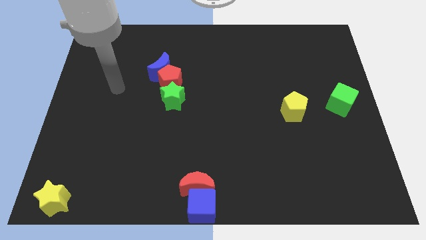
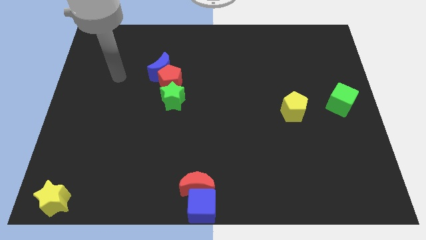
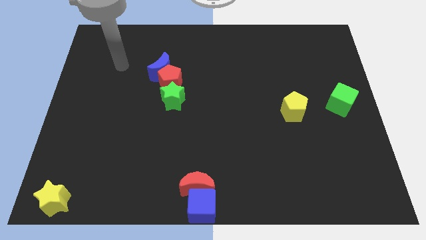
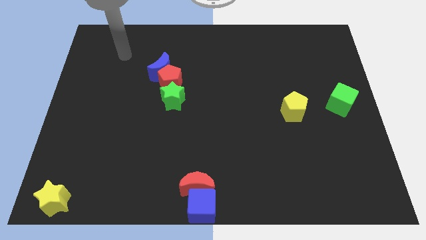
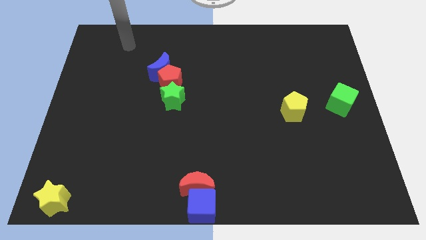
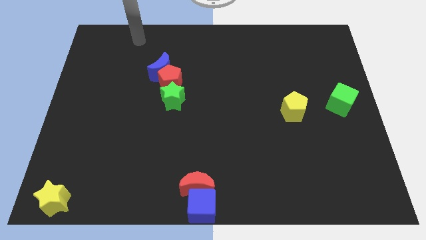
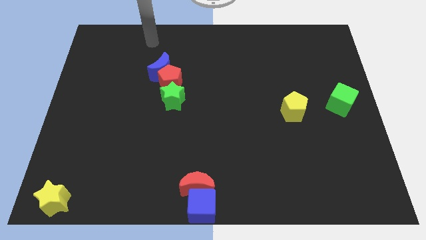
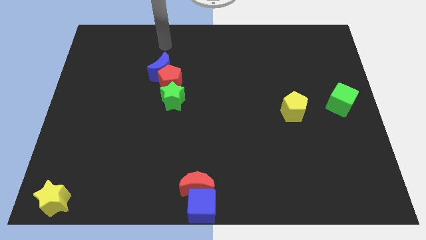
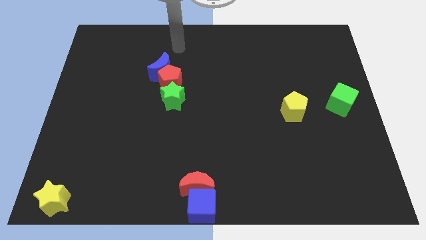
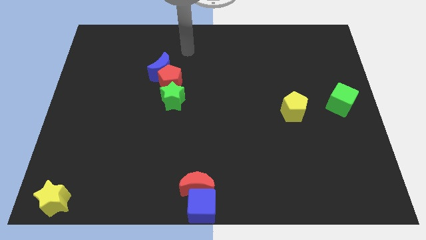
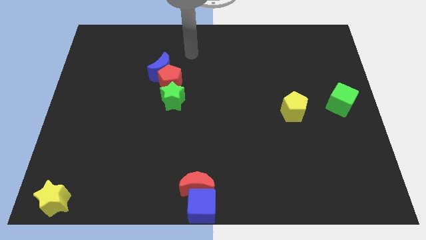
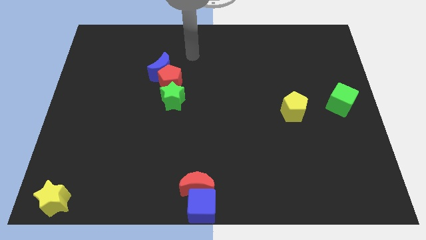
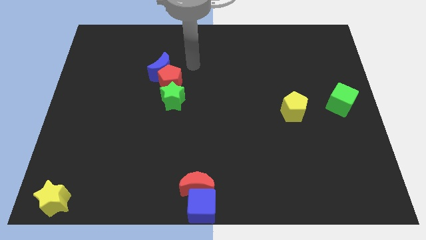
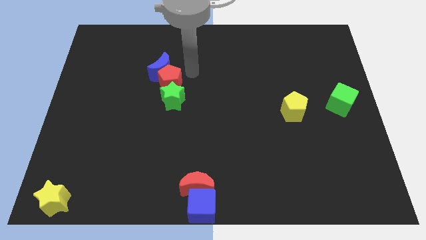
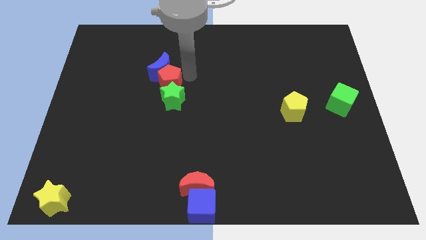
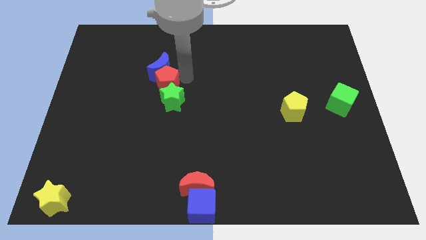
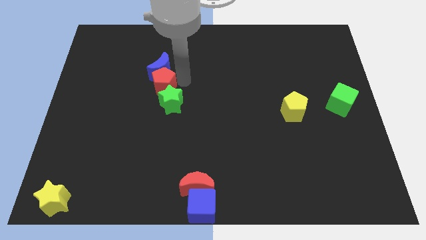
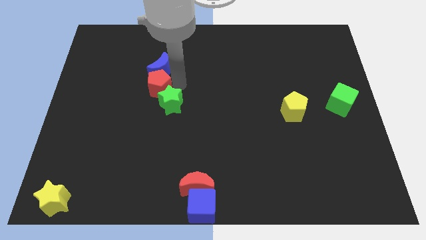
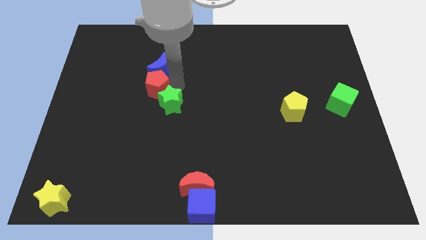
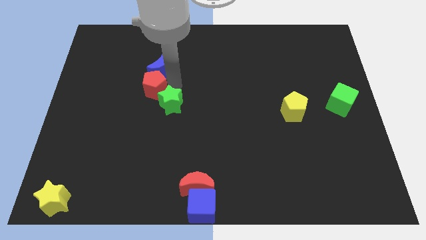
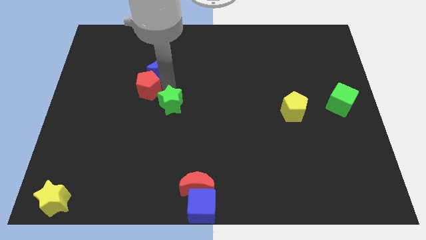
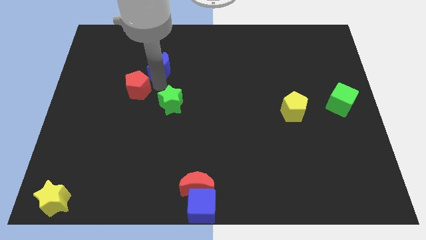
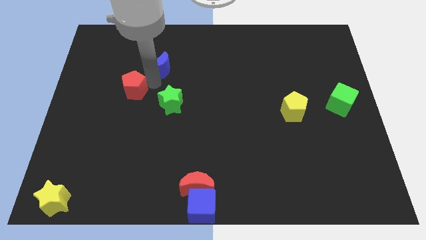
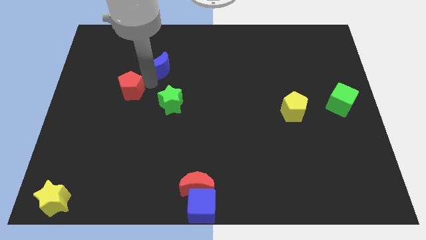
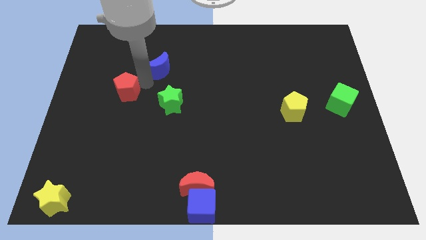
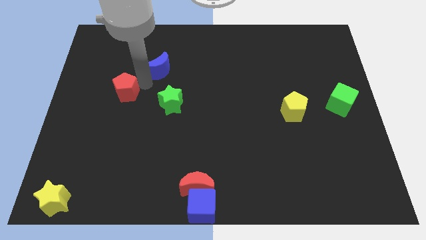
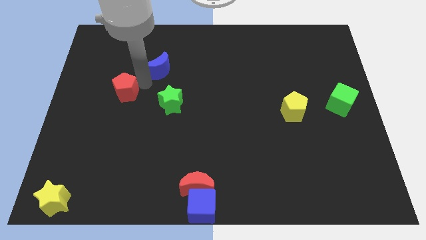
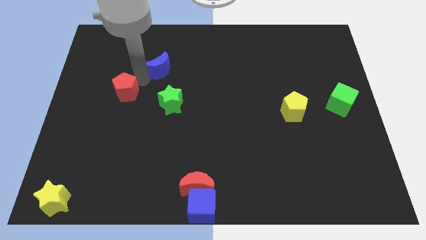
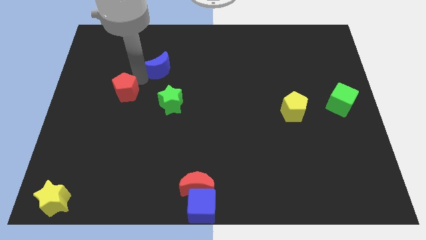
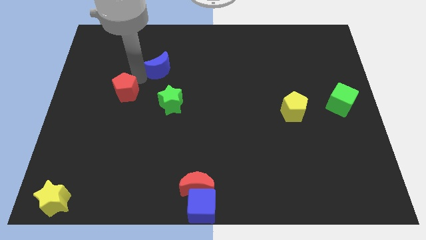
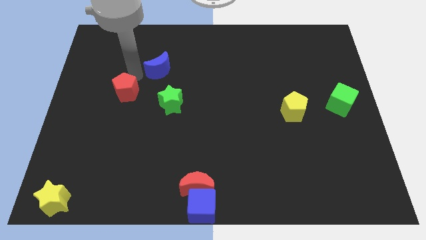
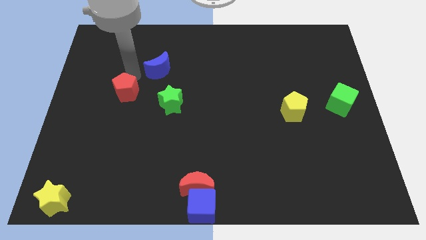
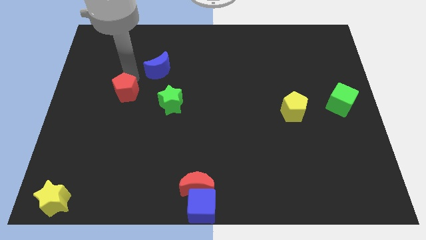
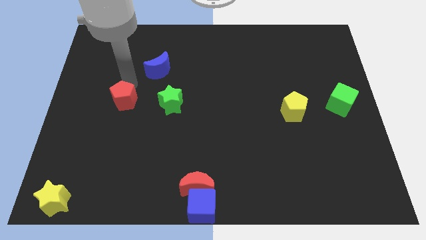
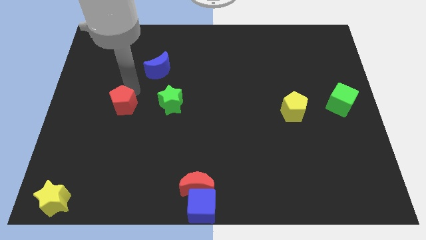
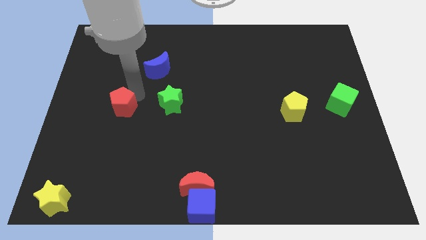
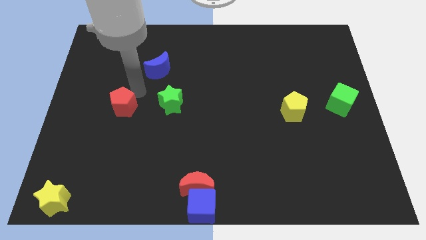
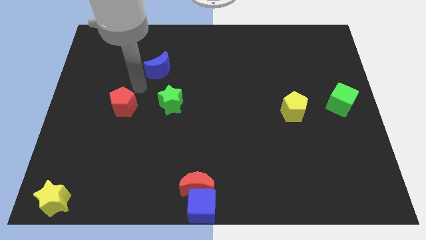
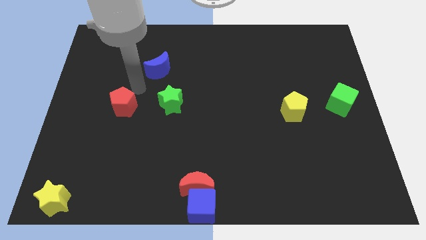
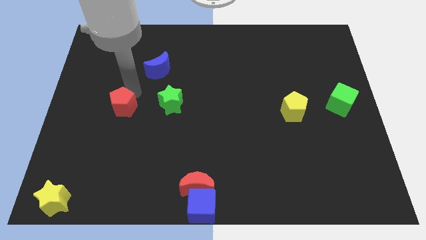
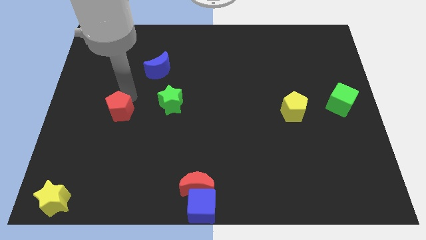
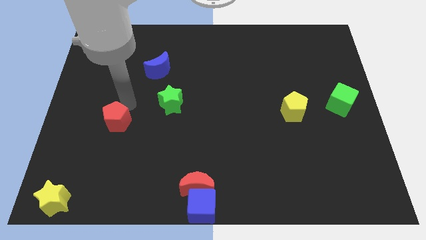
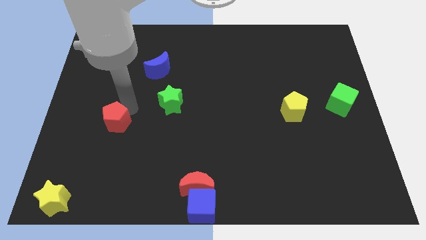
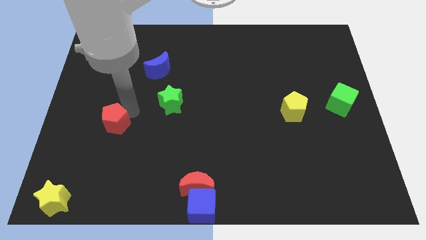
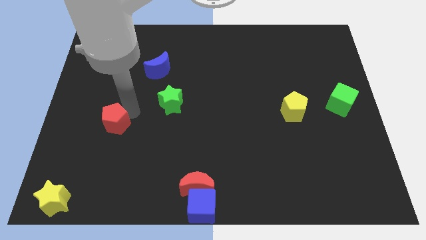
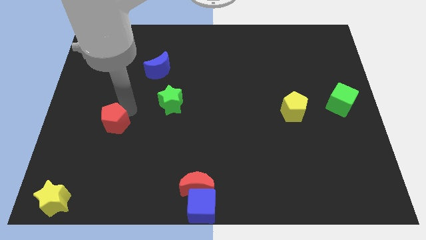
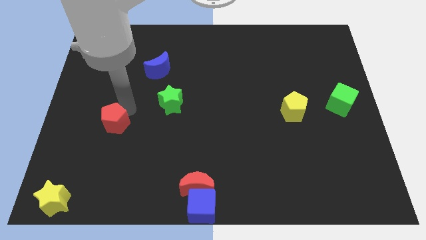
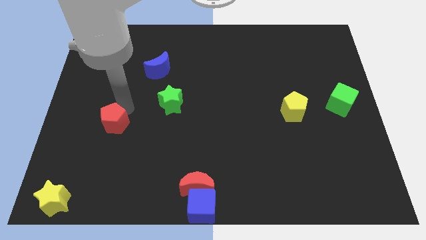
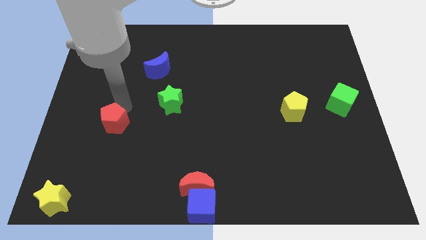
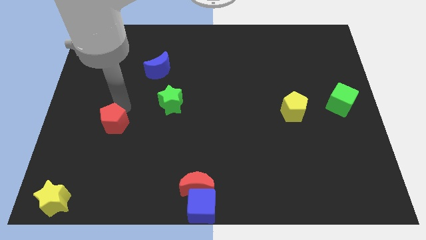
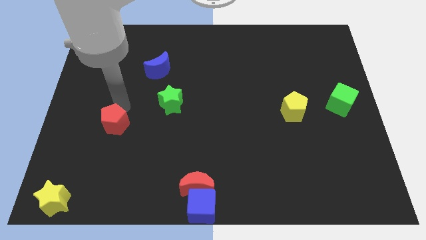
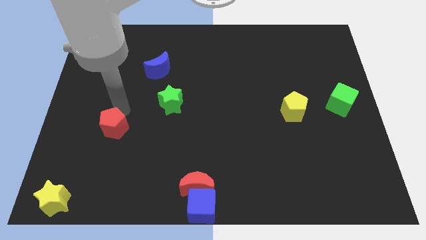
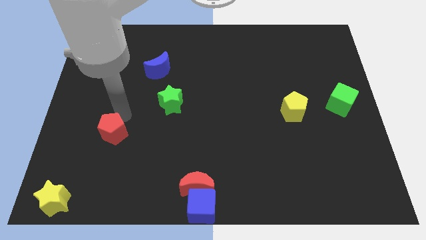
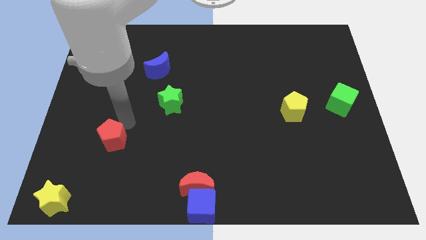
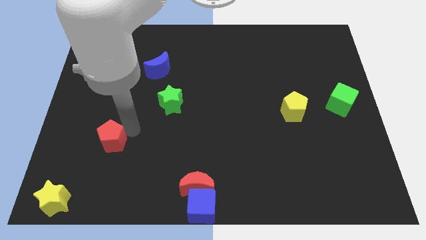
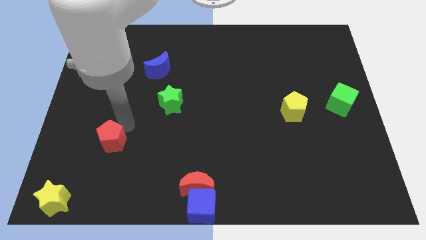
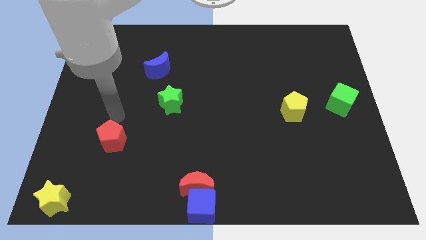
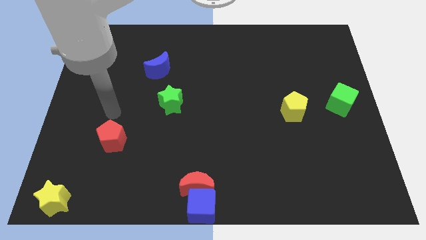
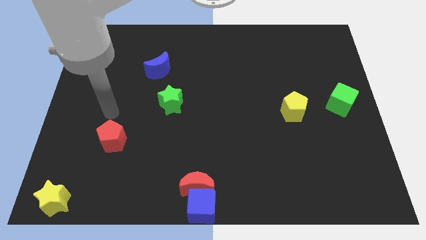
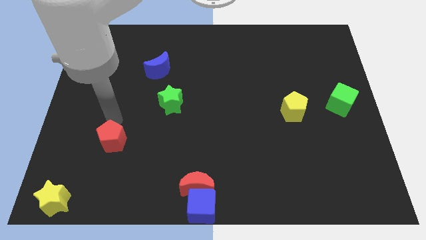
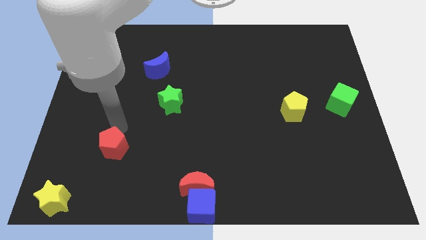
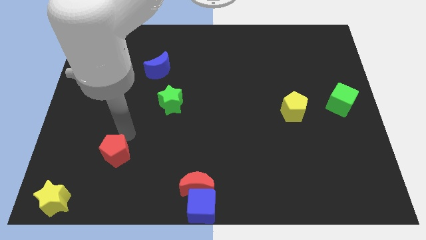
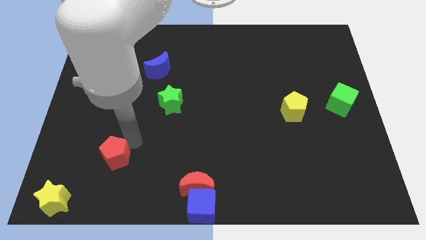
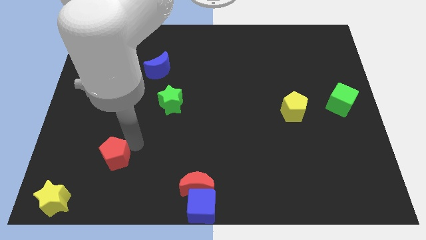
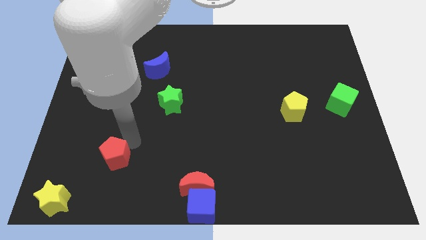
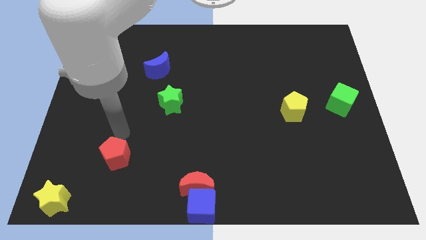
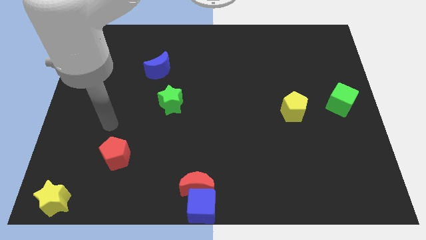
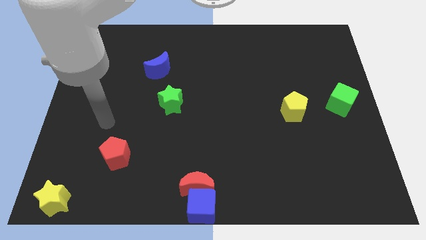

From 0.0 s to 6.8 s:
separate red pentagon from the green star and blue moon

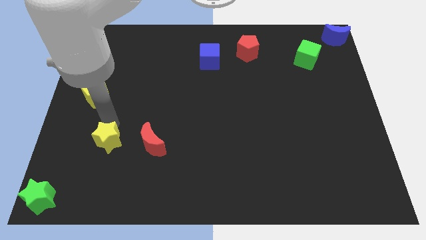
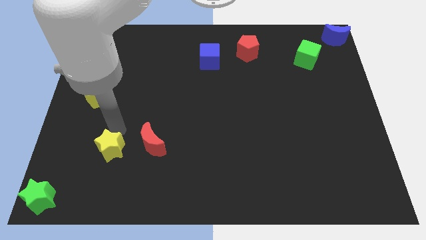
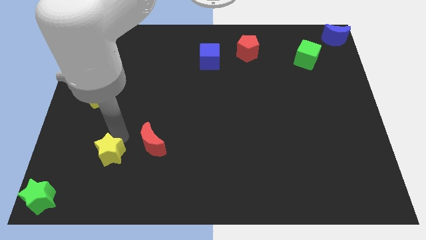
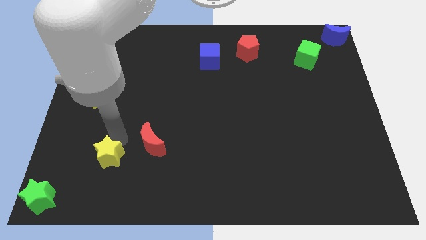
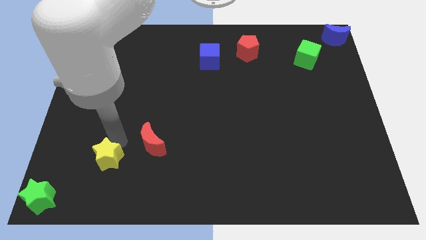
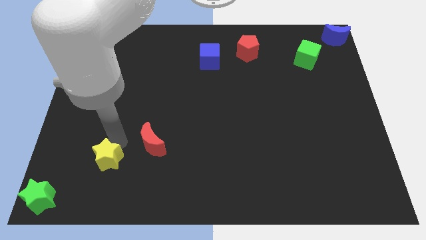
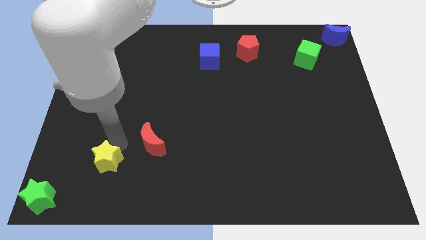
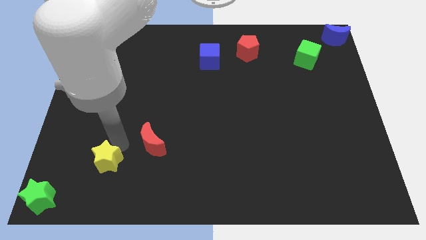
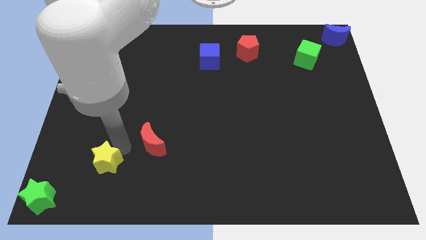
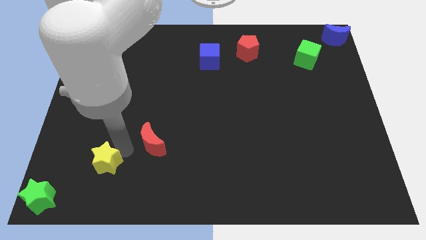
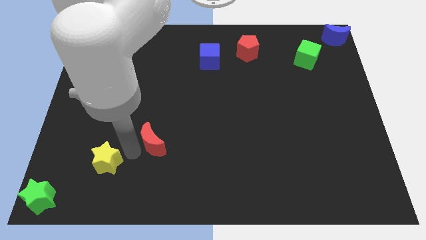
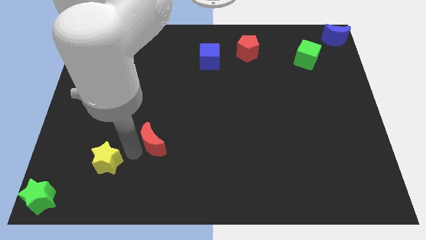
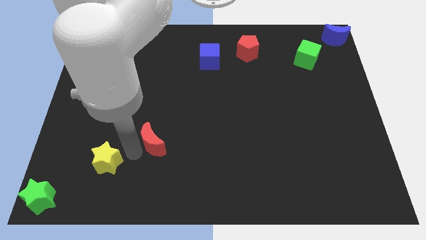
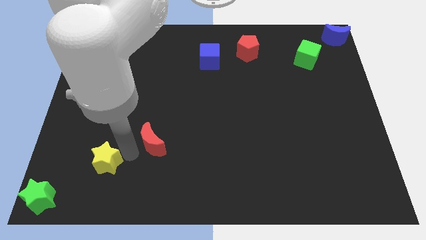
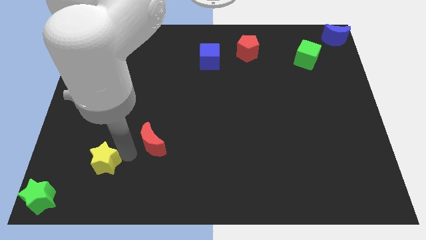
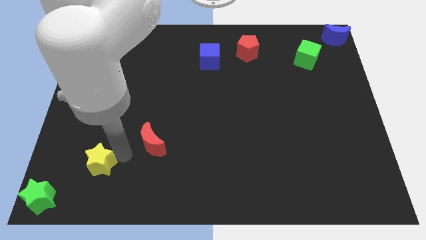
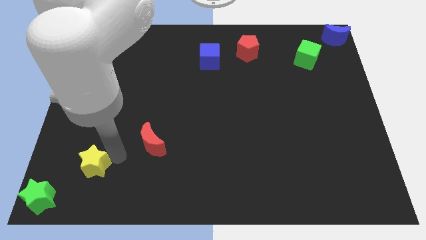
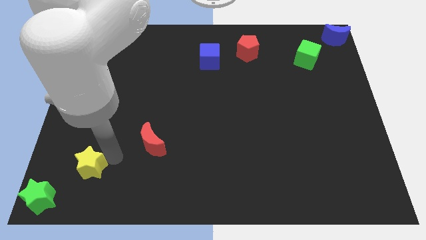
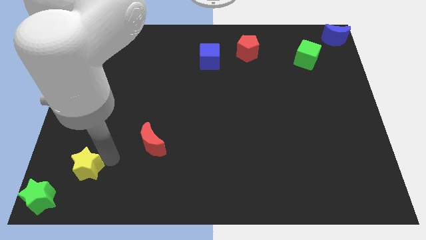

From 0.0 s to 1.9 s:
place the yellow star diagonally to the green star

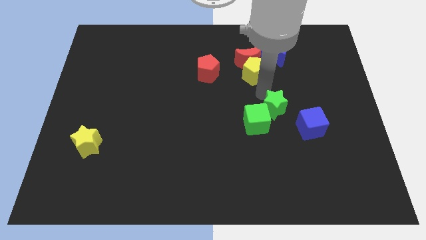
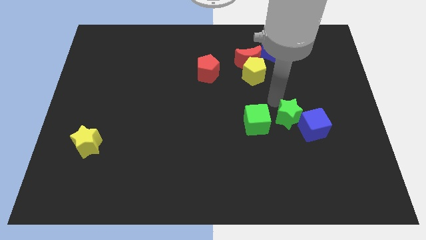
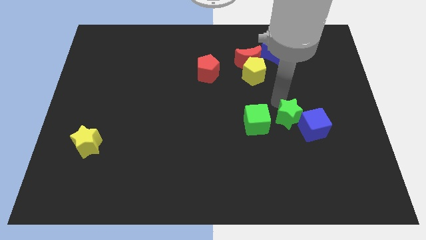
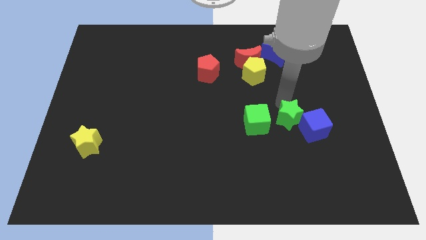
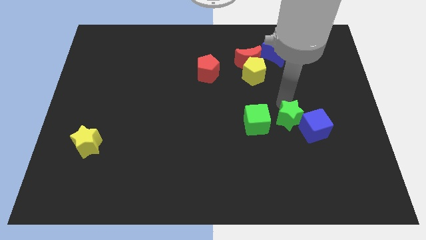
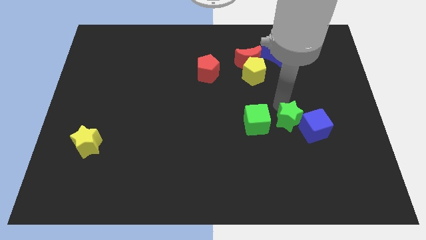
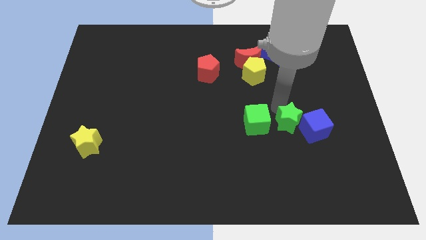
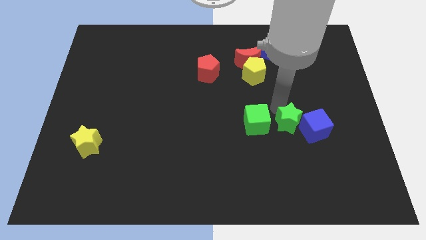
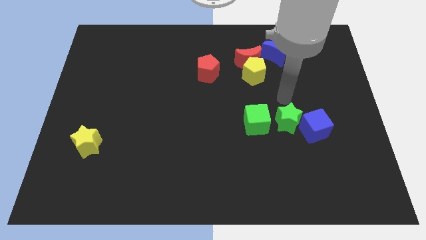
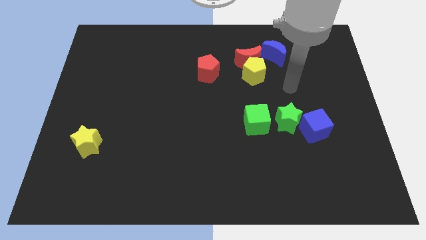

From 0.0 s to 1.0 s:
move the green star in between blue cube and green cube
